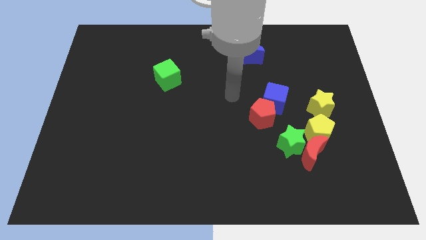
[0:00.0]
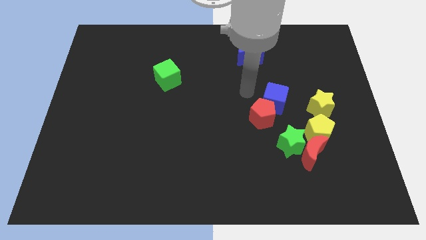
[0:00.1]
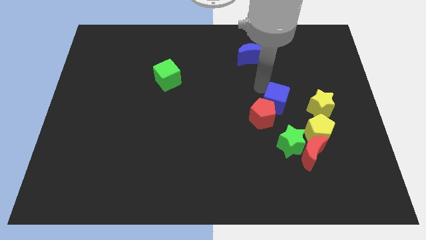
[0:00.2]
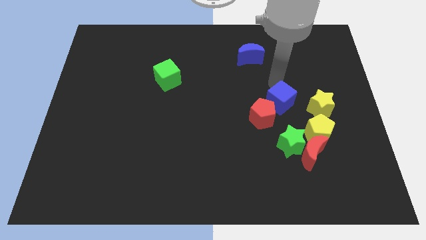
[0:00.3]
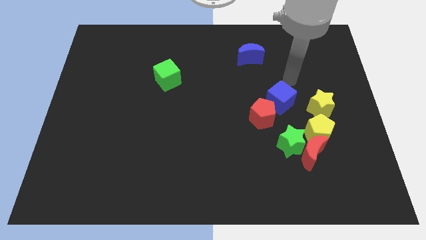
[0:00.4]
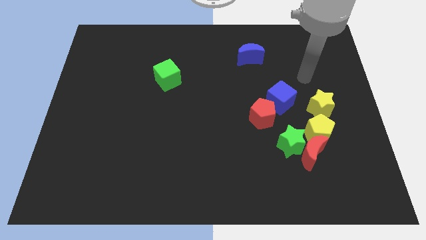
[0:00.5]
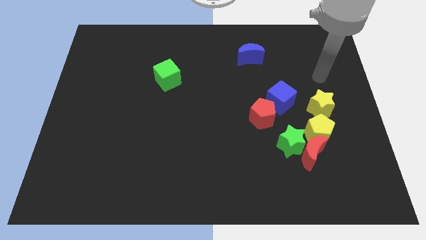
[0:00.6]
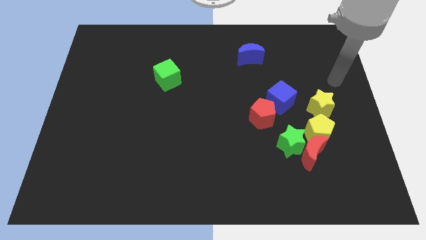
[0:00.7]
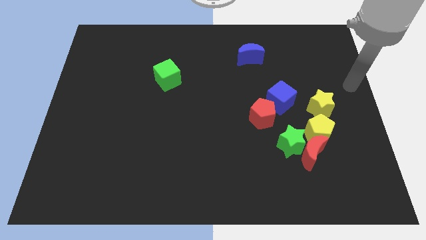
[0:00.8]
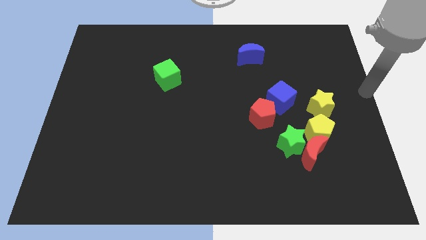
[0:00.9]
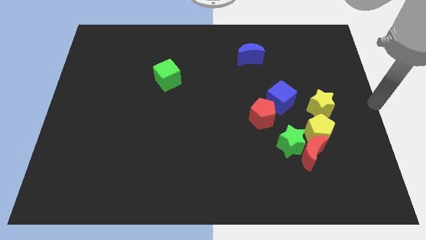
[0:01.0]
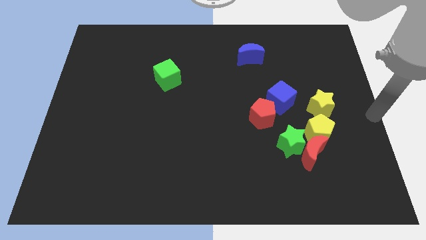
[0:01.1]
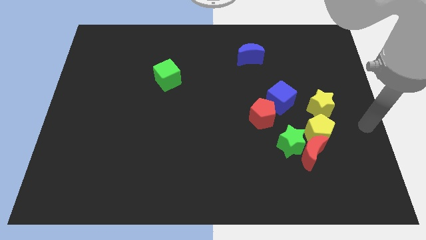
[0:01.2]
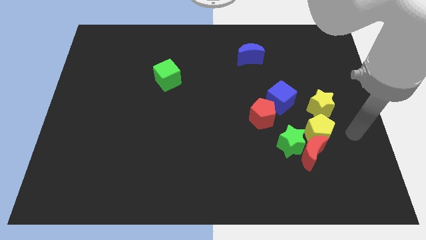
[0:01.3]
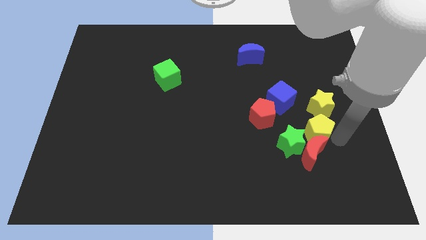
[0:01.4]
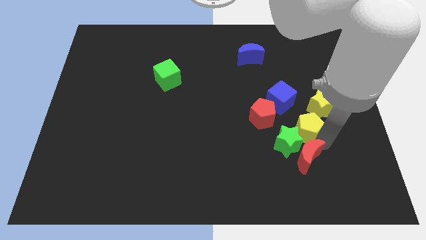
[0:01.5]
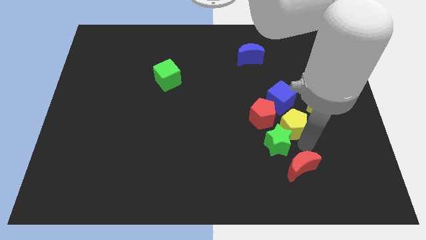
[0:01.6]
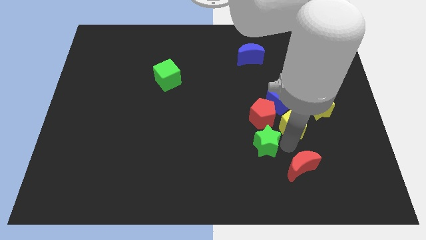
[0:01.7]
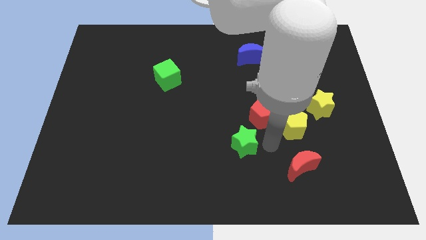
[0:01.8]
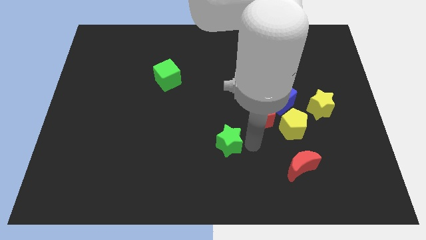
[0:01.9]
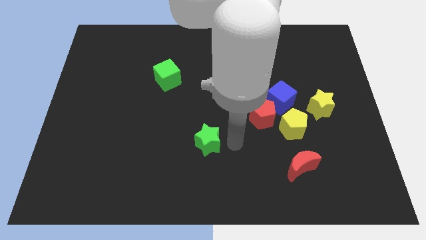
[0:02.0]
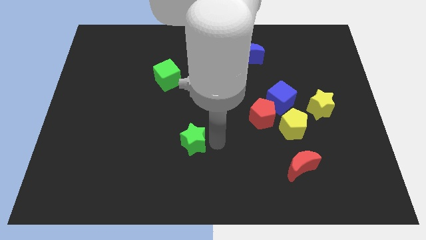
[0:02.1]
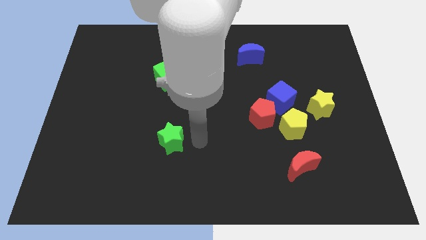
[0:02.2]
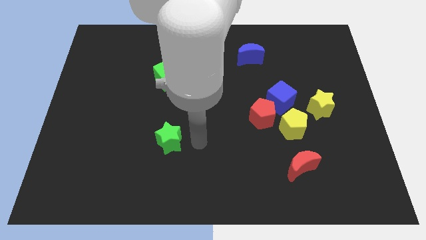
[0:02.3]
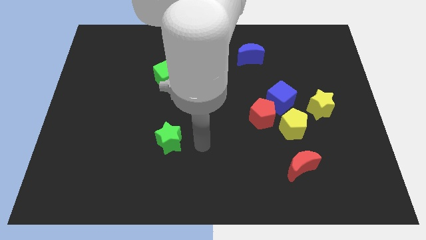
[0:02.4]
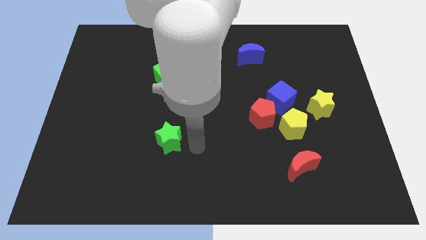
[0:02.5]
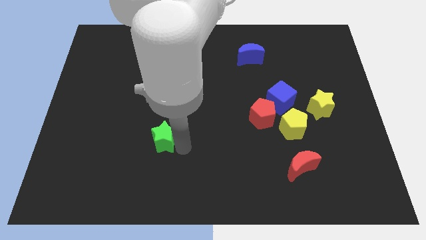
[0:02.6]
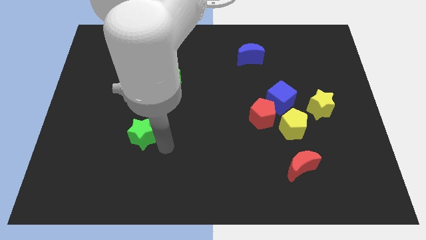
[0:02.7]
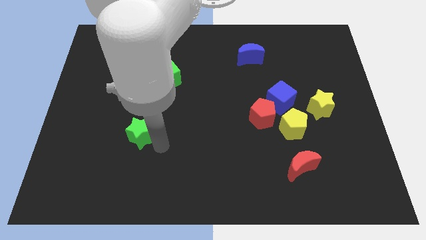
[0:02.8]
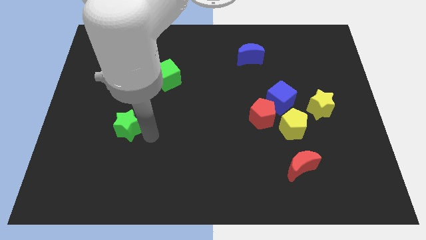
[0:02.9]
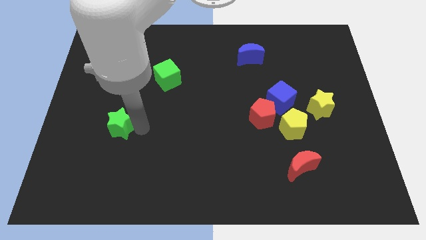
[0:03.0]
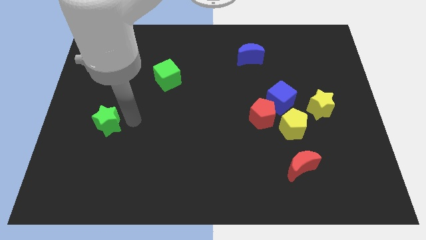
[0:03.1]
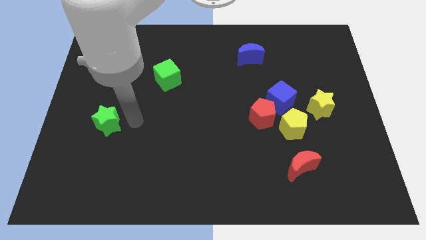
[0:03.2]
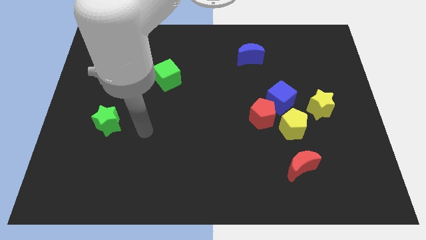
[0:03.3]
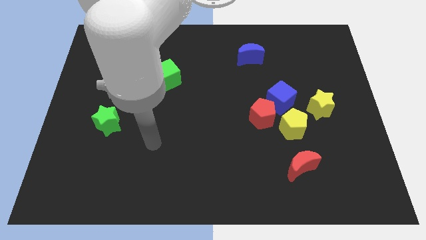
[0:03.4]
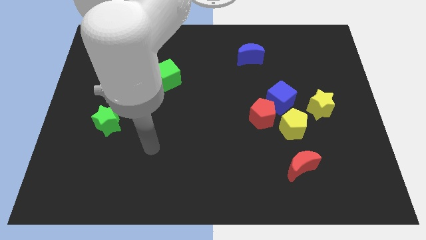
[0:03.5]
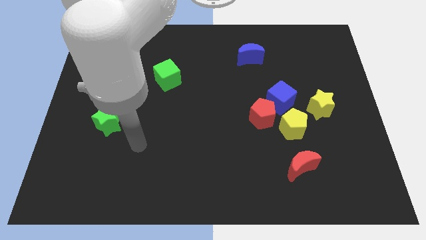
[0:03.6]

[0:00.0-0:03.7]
move green star to the left middle of the board

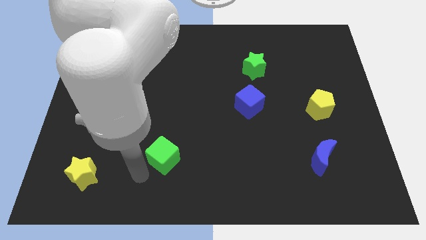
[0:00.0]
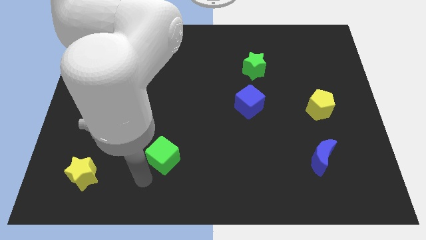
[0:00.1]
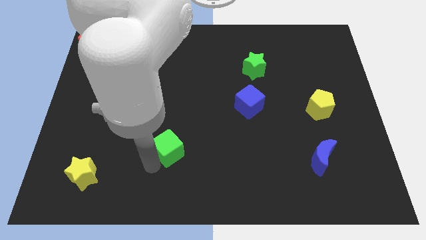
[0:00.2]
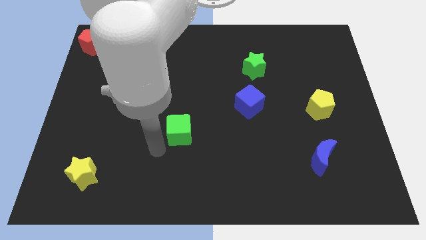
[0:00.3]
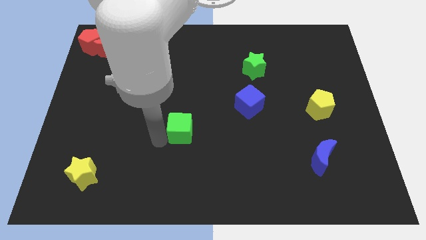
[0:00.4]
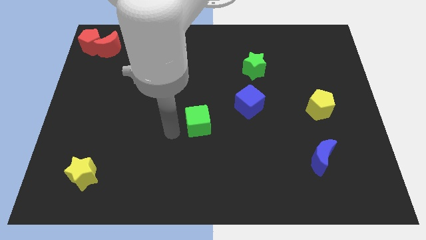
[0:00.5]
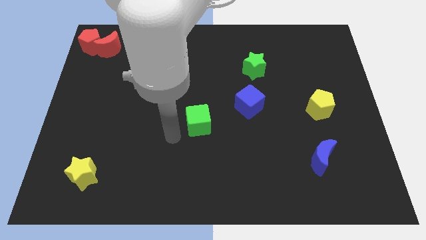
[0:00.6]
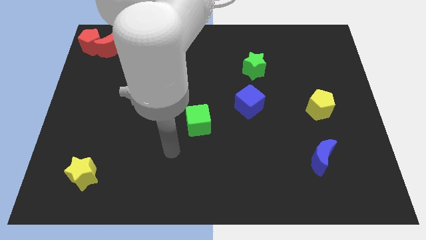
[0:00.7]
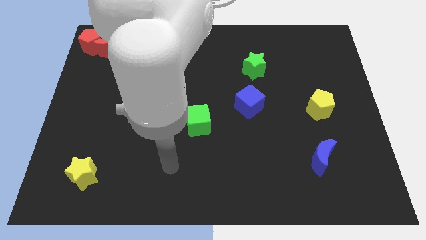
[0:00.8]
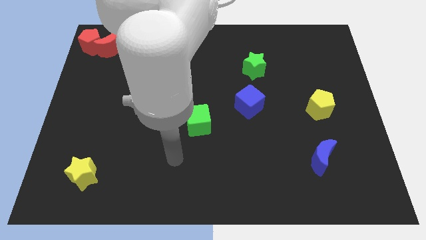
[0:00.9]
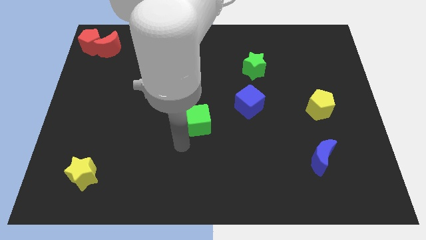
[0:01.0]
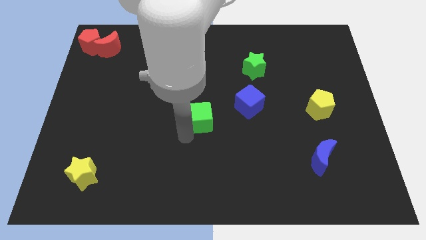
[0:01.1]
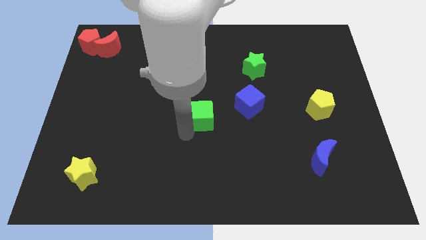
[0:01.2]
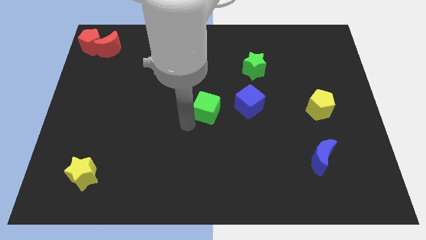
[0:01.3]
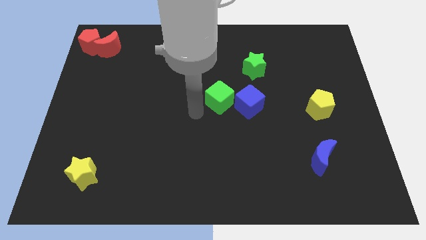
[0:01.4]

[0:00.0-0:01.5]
push the green cube to the center of the board

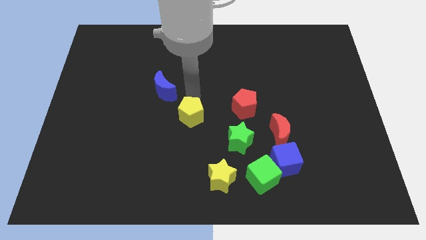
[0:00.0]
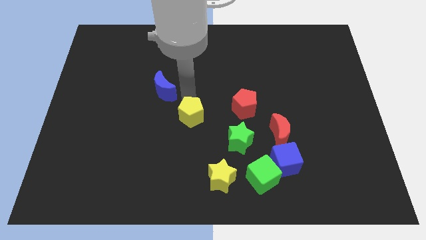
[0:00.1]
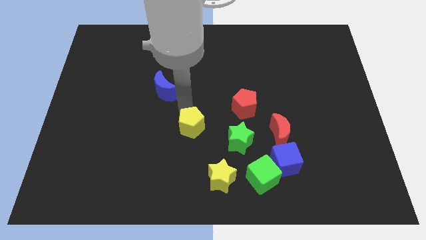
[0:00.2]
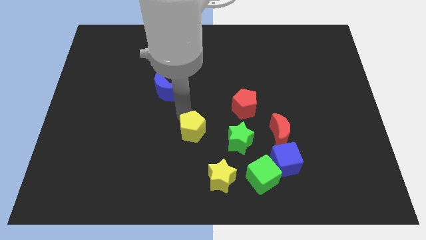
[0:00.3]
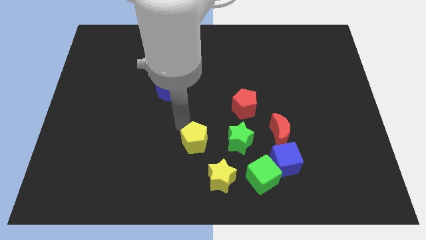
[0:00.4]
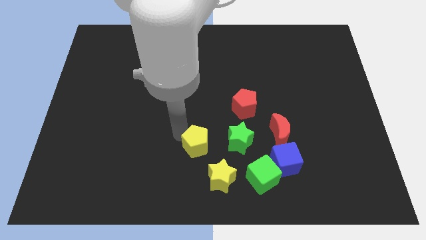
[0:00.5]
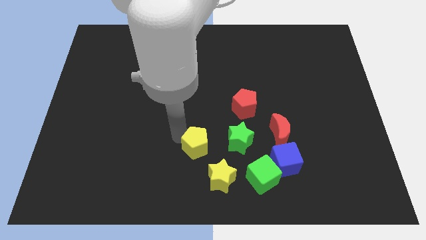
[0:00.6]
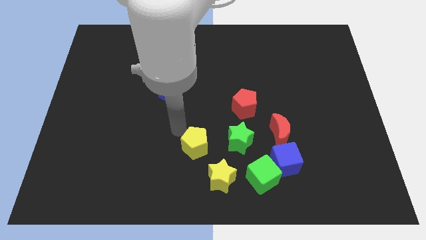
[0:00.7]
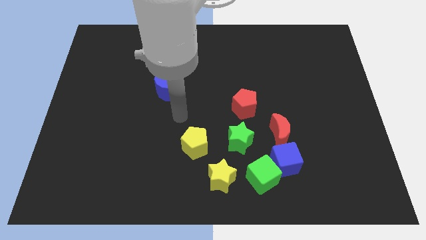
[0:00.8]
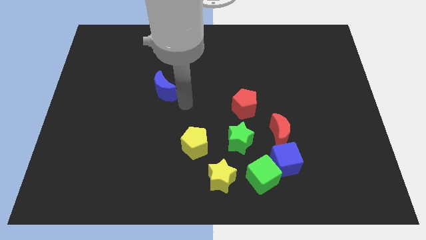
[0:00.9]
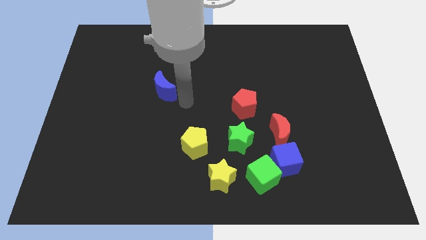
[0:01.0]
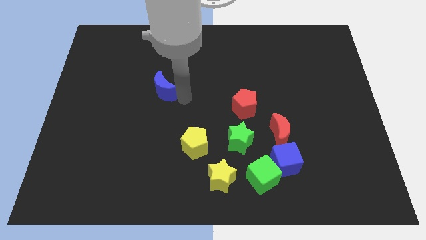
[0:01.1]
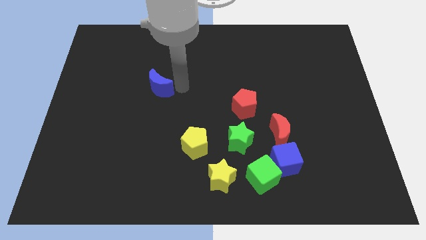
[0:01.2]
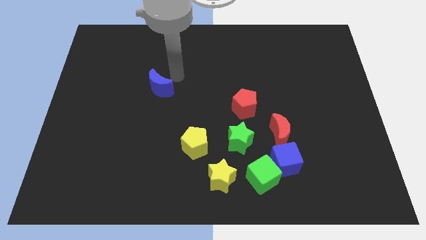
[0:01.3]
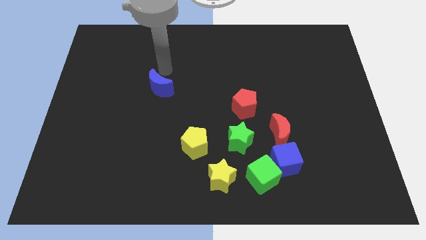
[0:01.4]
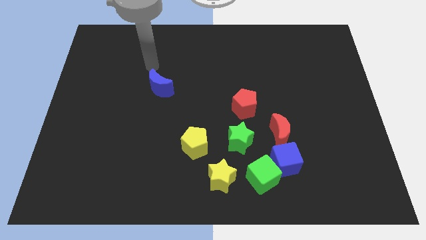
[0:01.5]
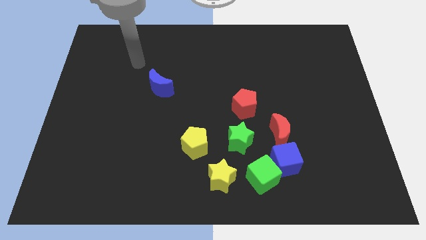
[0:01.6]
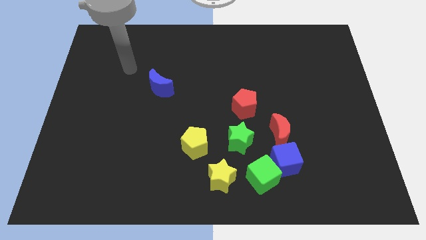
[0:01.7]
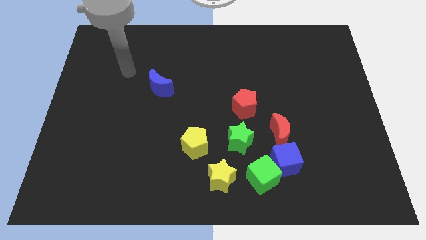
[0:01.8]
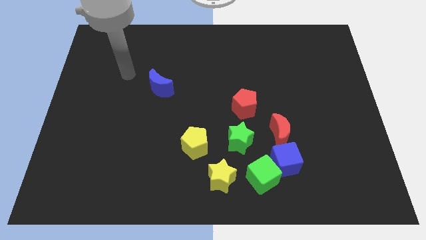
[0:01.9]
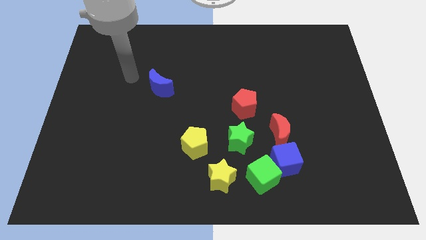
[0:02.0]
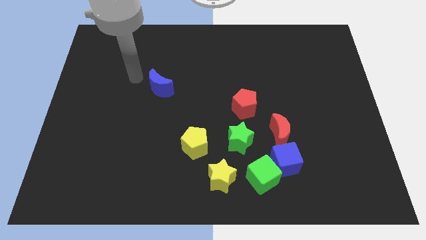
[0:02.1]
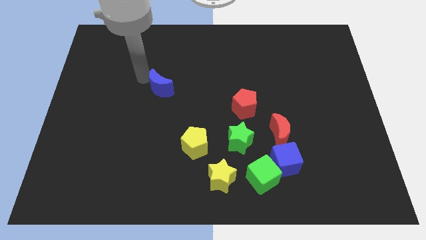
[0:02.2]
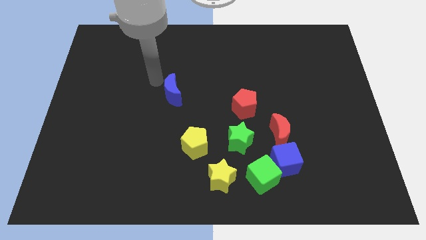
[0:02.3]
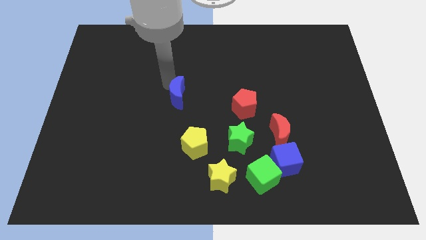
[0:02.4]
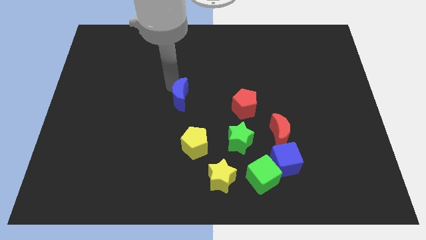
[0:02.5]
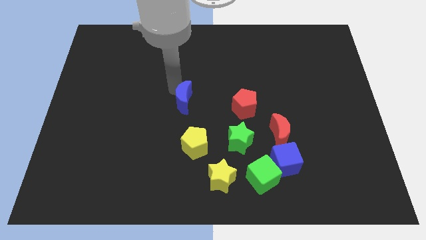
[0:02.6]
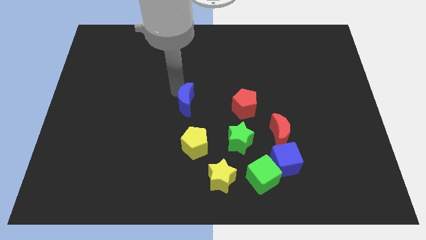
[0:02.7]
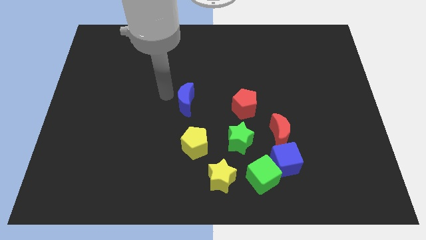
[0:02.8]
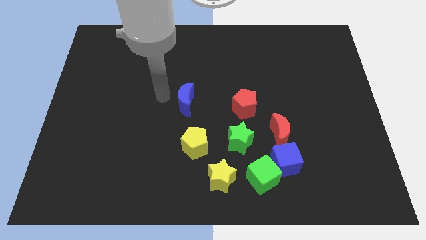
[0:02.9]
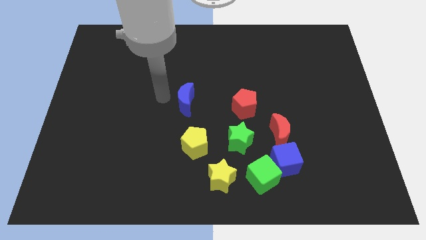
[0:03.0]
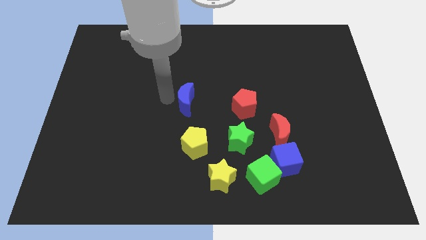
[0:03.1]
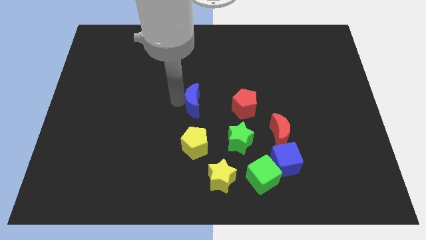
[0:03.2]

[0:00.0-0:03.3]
move the blue moon above the yellow pentagon

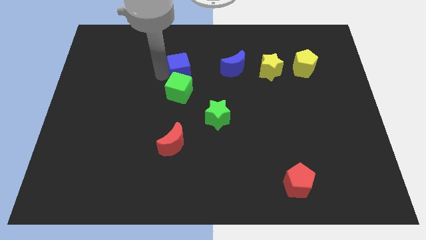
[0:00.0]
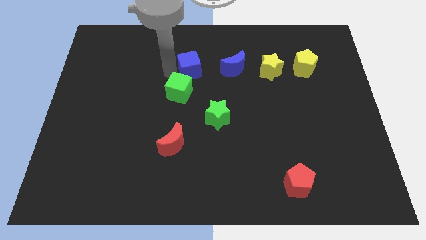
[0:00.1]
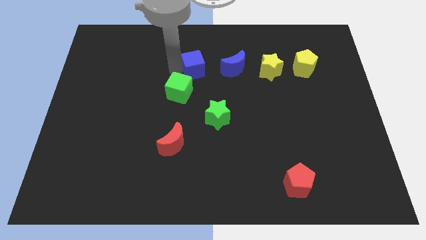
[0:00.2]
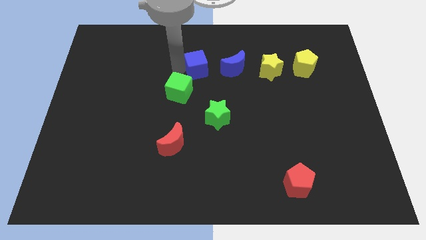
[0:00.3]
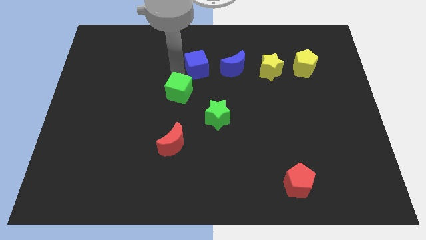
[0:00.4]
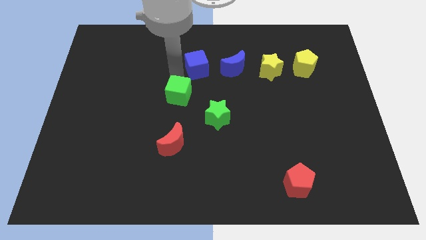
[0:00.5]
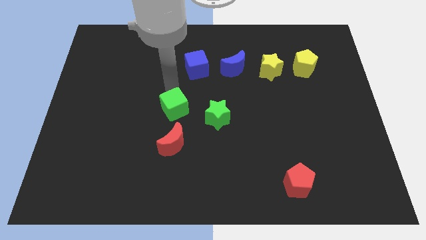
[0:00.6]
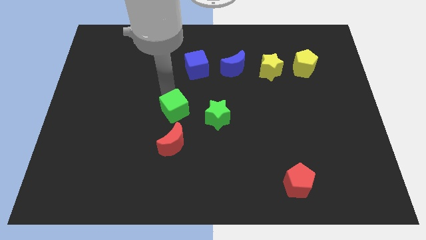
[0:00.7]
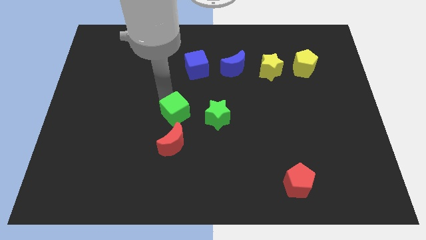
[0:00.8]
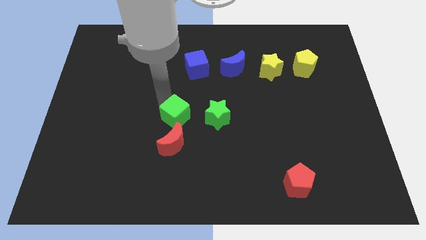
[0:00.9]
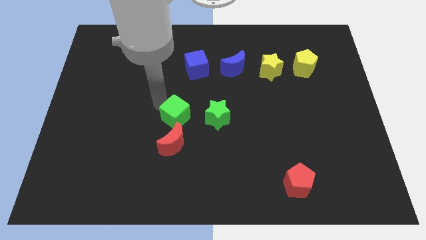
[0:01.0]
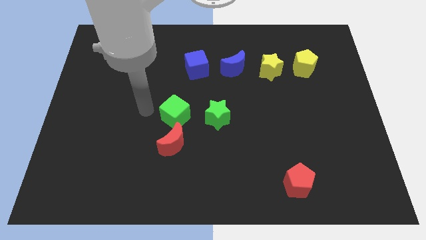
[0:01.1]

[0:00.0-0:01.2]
move the green cube down parallel to the left side of the green star
